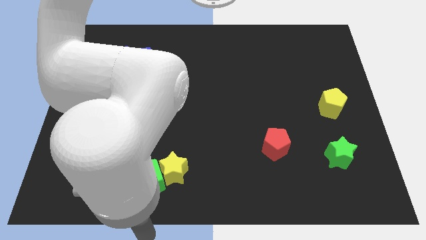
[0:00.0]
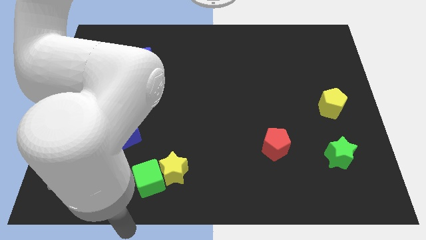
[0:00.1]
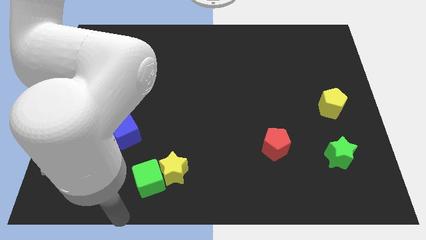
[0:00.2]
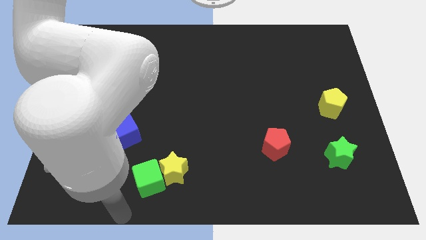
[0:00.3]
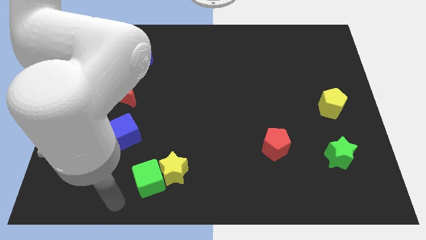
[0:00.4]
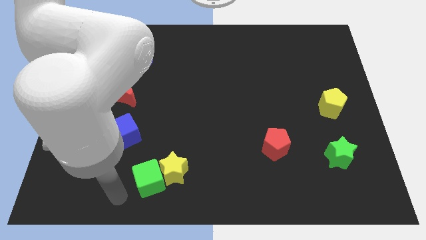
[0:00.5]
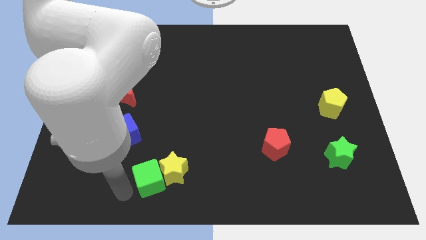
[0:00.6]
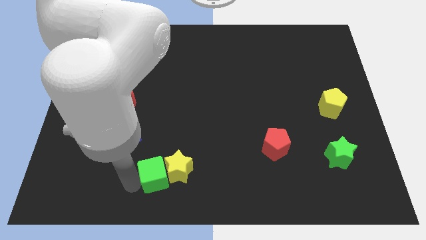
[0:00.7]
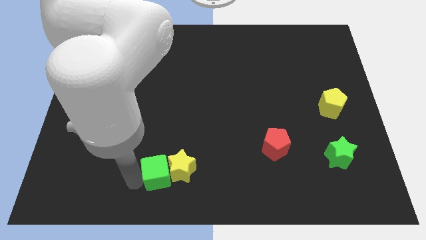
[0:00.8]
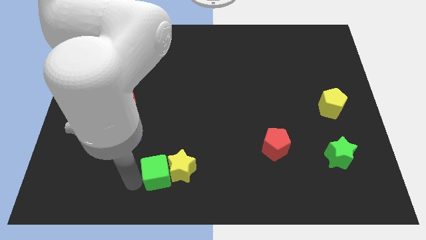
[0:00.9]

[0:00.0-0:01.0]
touch green cube slightly

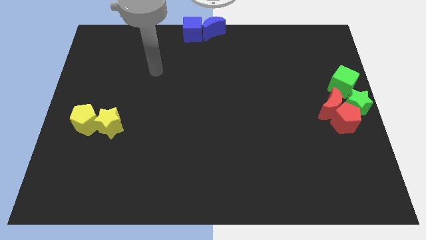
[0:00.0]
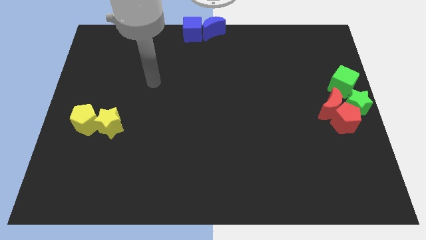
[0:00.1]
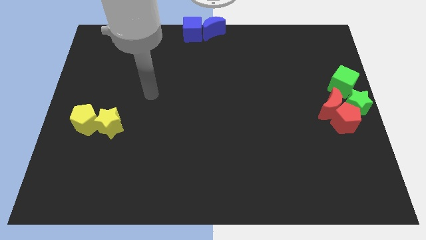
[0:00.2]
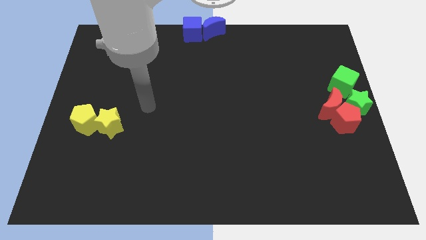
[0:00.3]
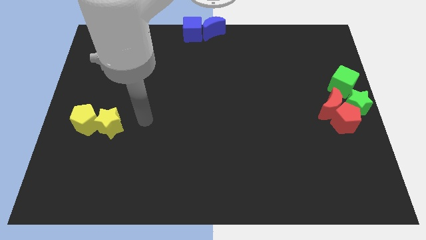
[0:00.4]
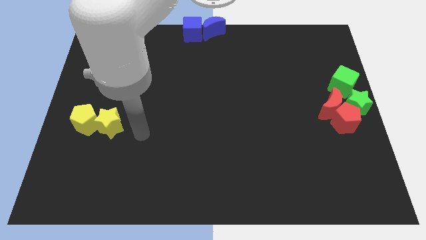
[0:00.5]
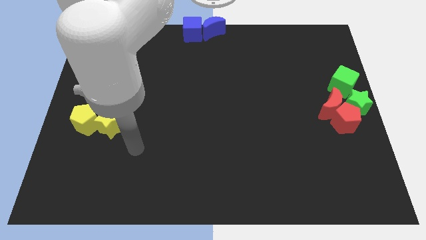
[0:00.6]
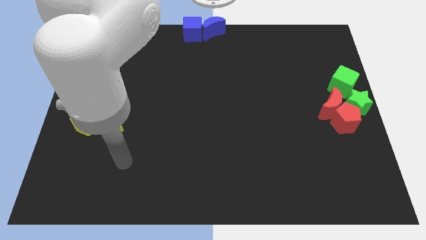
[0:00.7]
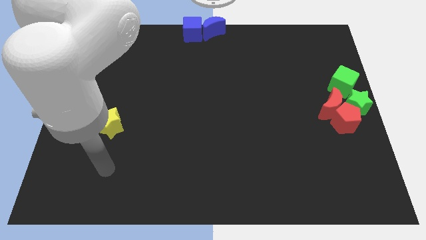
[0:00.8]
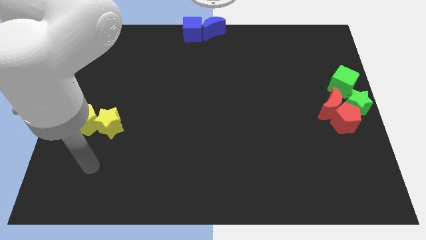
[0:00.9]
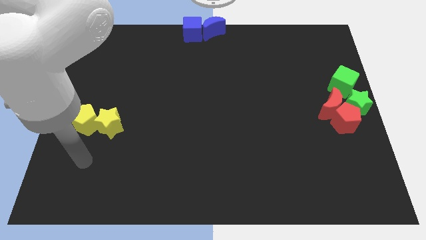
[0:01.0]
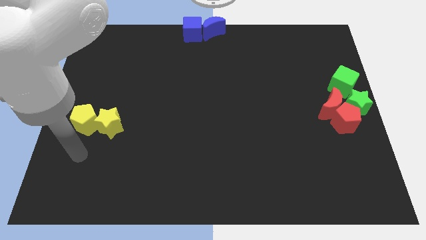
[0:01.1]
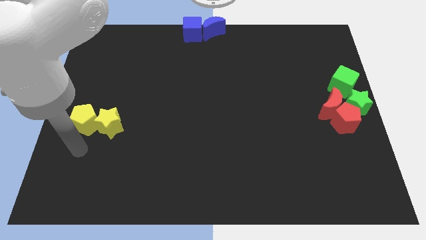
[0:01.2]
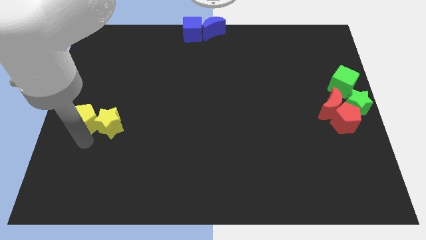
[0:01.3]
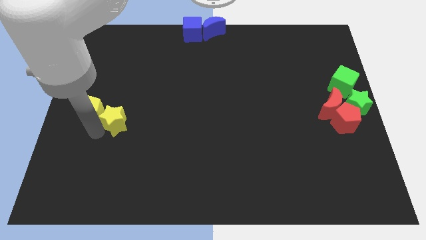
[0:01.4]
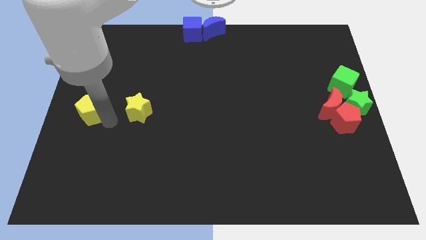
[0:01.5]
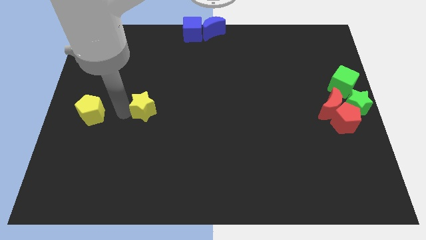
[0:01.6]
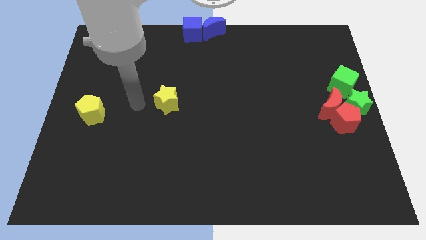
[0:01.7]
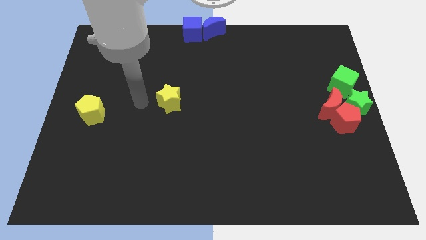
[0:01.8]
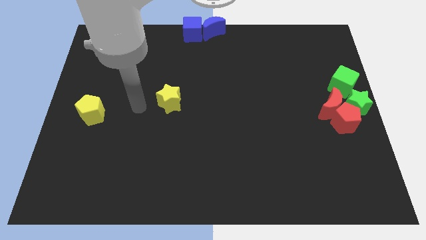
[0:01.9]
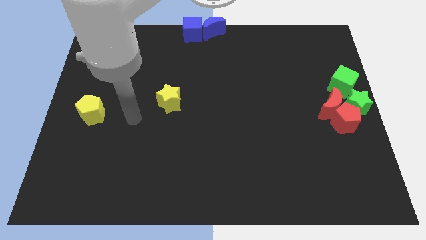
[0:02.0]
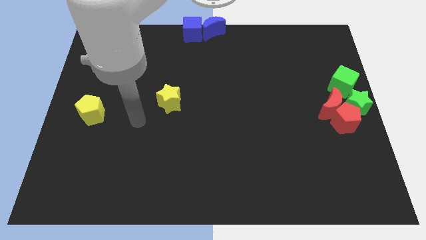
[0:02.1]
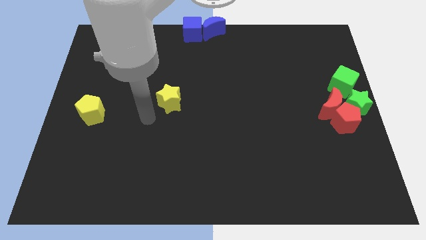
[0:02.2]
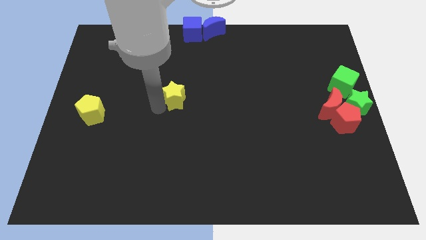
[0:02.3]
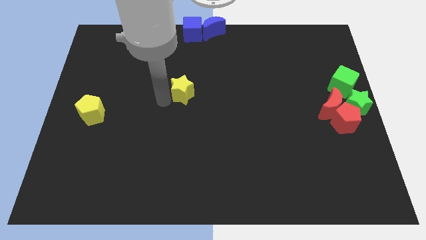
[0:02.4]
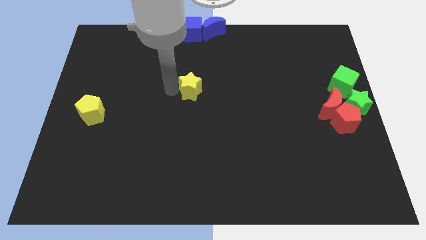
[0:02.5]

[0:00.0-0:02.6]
push yellow star below blue cube

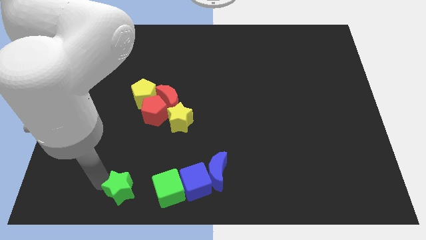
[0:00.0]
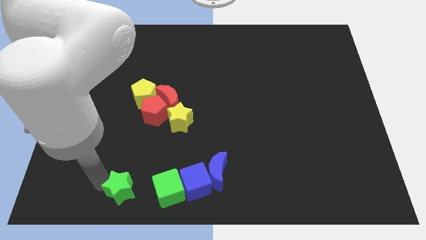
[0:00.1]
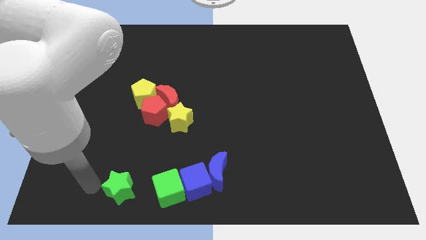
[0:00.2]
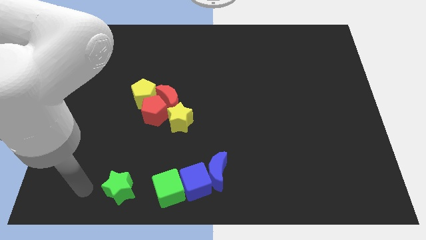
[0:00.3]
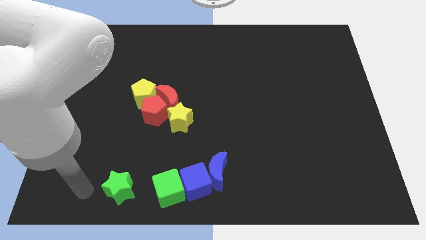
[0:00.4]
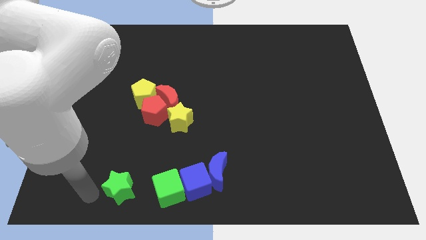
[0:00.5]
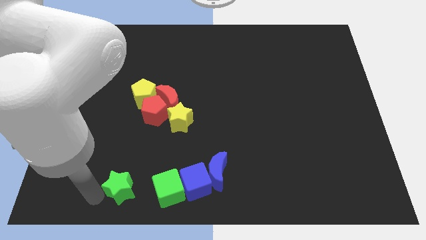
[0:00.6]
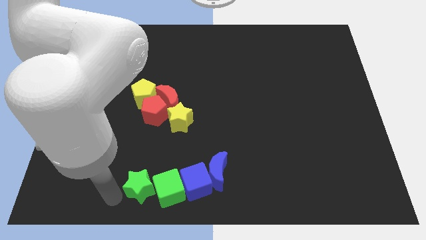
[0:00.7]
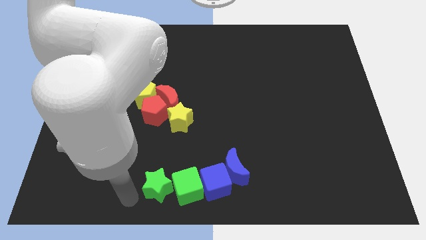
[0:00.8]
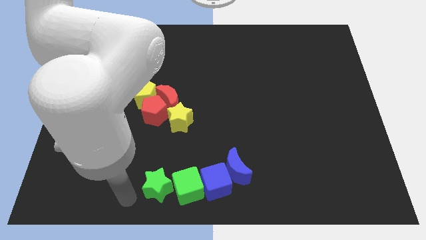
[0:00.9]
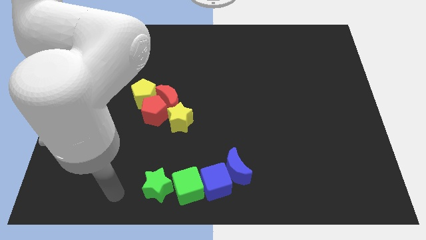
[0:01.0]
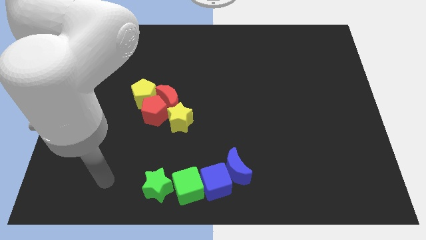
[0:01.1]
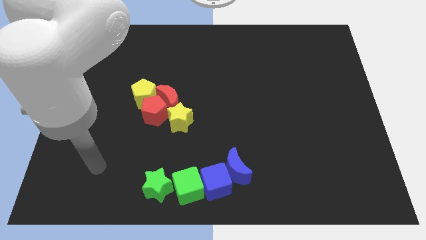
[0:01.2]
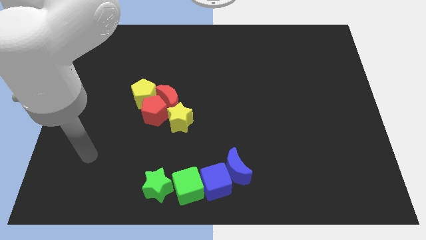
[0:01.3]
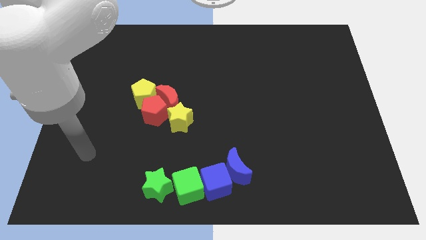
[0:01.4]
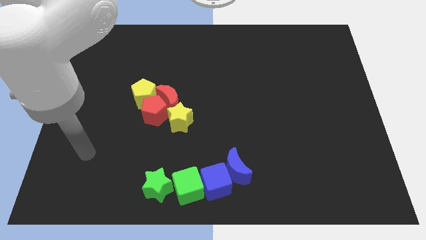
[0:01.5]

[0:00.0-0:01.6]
push green star into the green cube

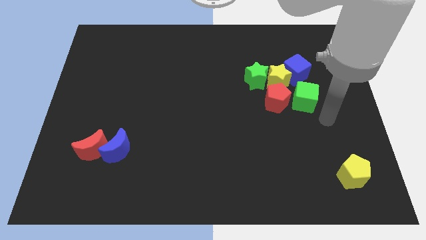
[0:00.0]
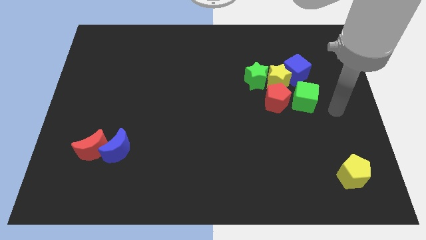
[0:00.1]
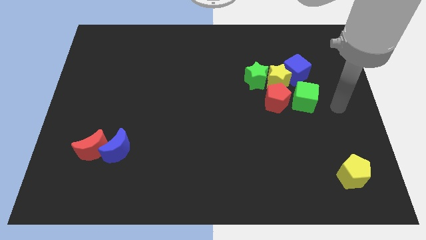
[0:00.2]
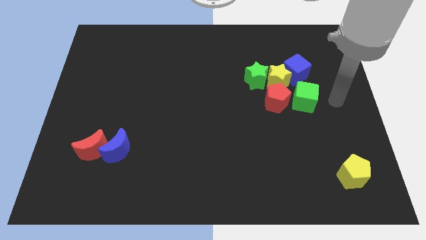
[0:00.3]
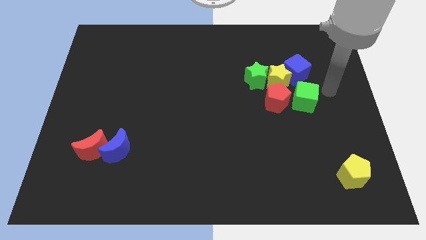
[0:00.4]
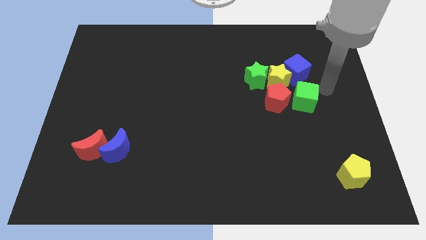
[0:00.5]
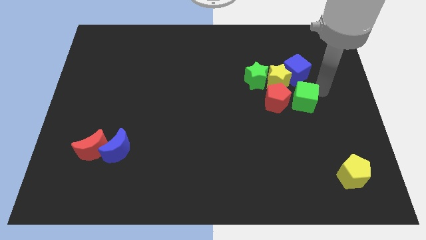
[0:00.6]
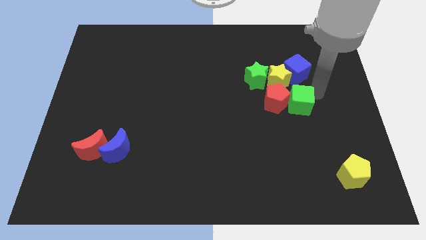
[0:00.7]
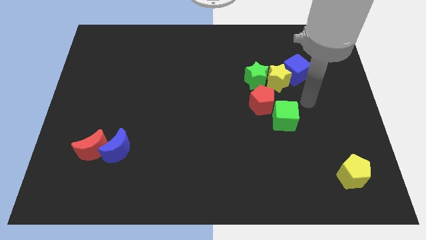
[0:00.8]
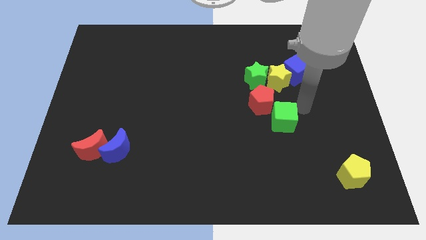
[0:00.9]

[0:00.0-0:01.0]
move the green cube bottom right to red pentagon

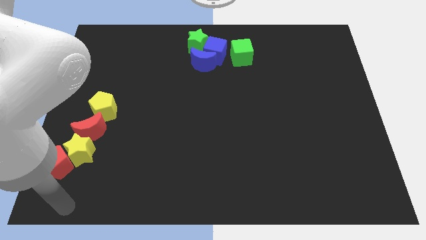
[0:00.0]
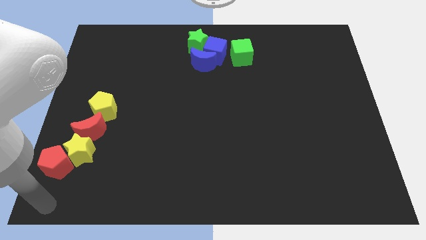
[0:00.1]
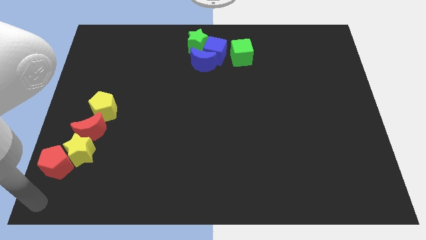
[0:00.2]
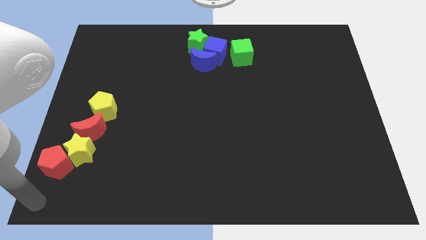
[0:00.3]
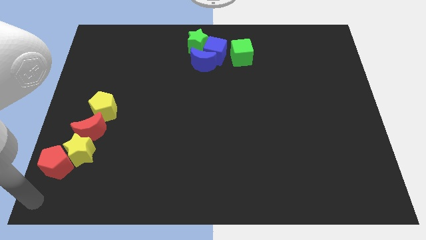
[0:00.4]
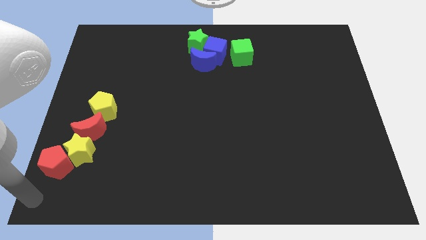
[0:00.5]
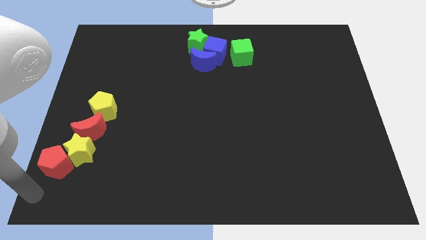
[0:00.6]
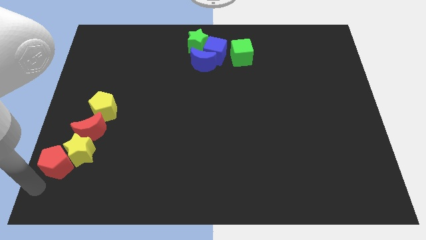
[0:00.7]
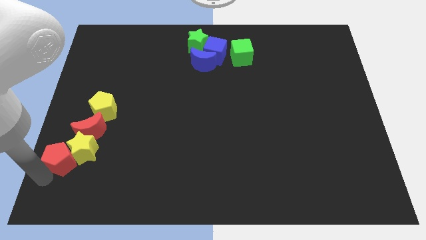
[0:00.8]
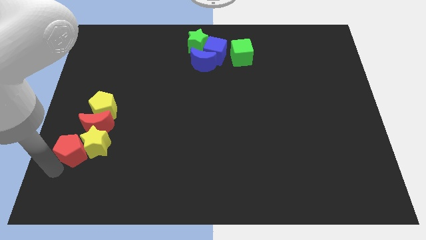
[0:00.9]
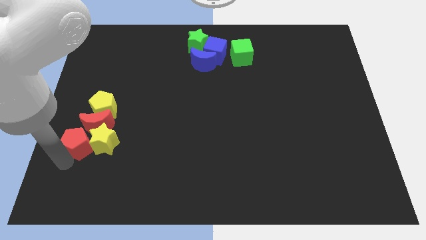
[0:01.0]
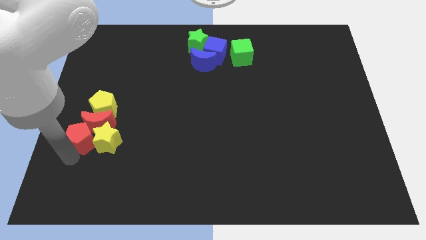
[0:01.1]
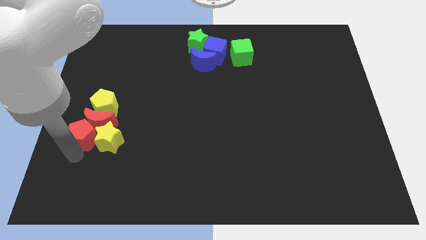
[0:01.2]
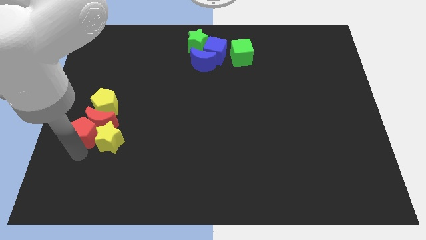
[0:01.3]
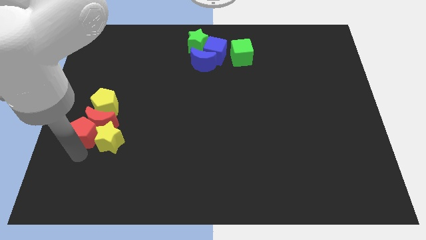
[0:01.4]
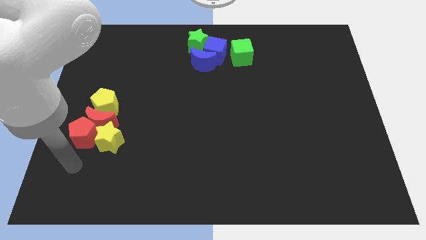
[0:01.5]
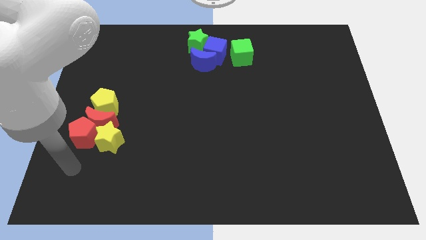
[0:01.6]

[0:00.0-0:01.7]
push the red and yellow blocks towards the top

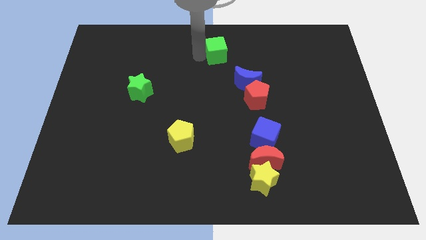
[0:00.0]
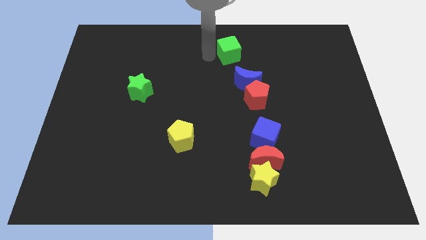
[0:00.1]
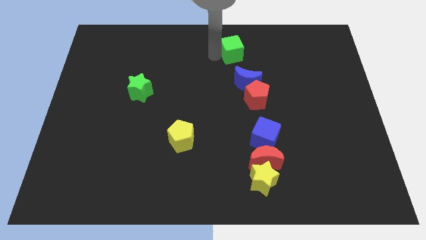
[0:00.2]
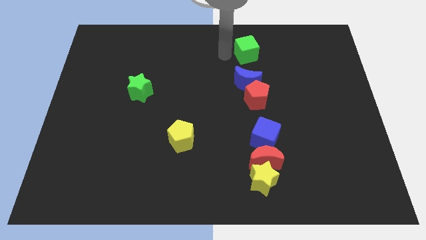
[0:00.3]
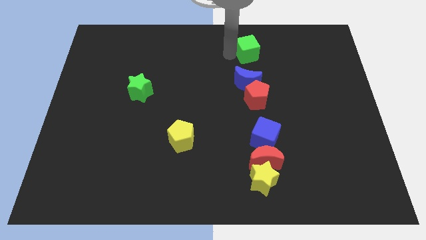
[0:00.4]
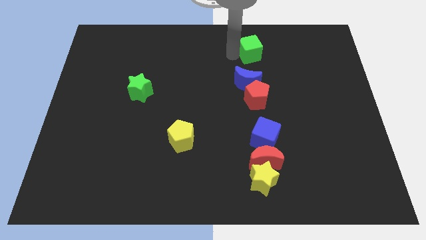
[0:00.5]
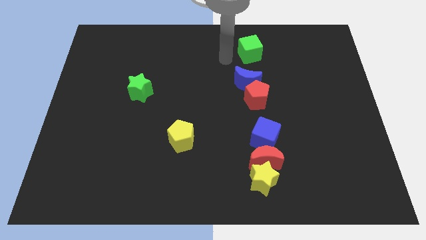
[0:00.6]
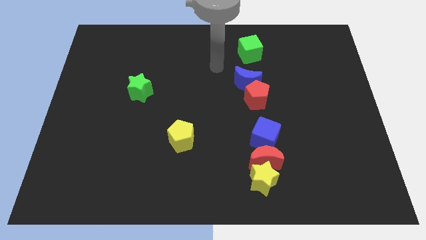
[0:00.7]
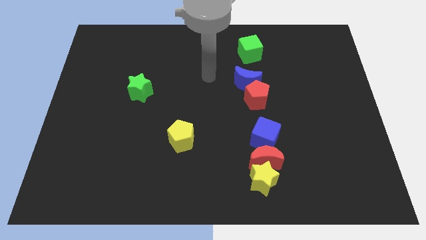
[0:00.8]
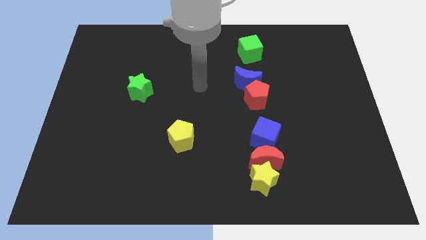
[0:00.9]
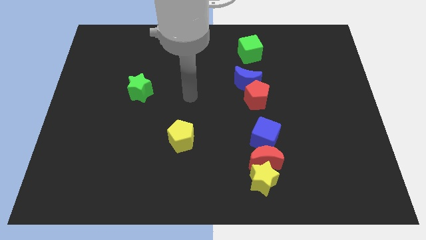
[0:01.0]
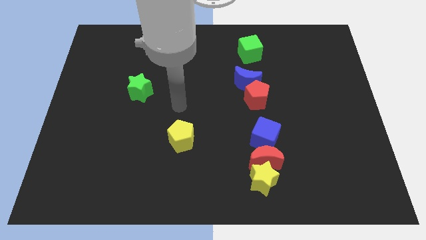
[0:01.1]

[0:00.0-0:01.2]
place the green cube above the blue crescent
